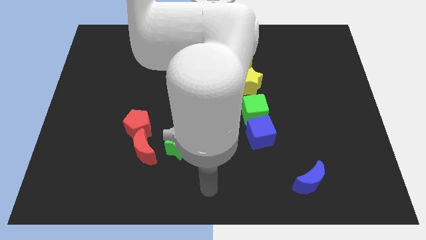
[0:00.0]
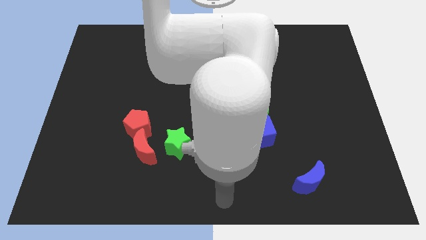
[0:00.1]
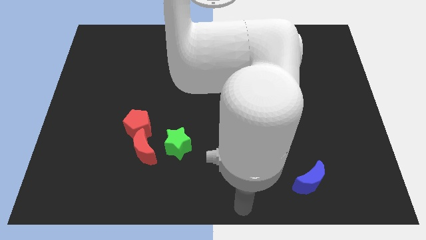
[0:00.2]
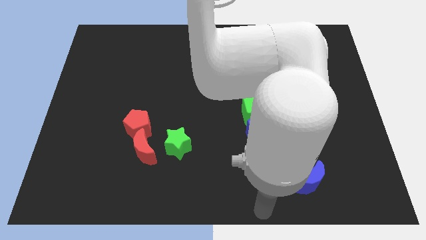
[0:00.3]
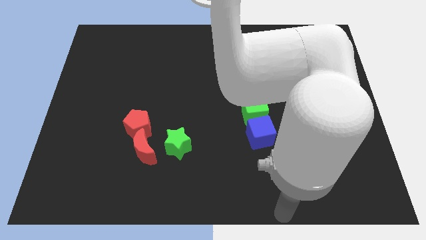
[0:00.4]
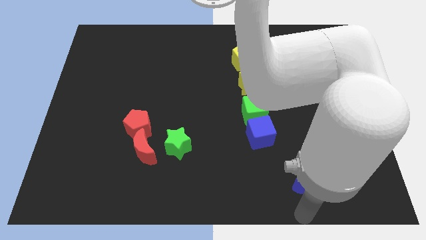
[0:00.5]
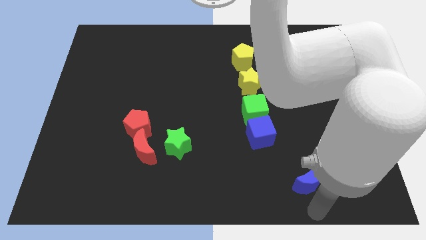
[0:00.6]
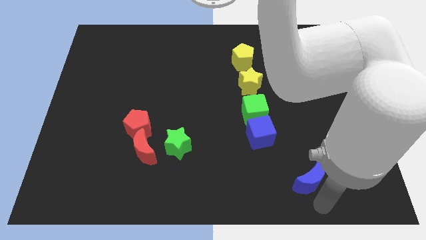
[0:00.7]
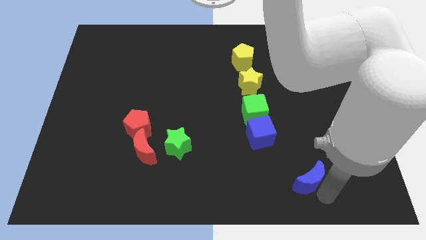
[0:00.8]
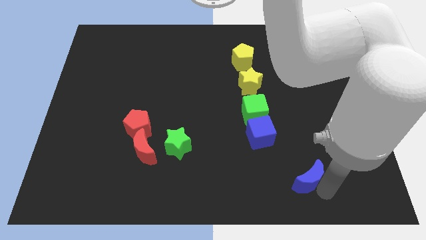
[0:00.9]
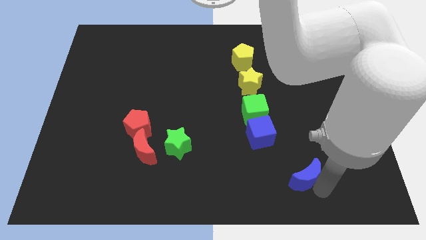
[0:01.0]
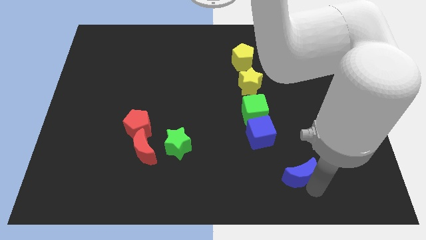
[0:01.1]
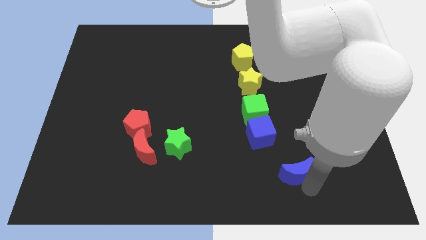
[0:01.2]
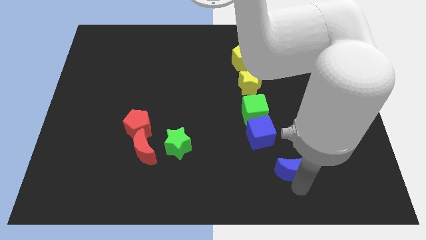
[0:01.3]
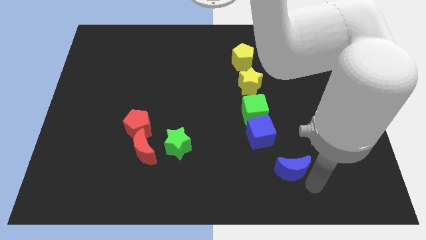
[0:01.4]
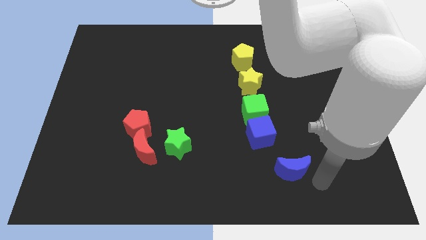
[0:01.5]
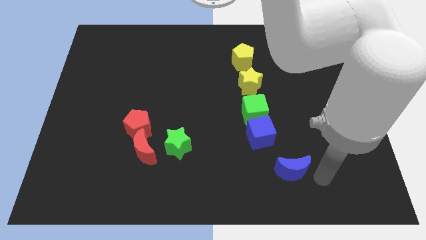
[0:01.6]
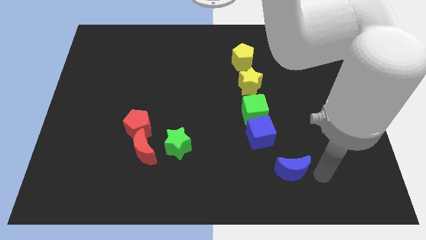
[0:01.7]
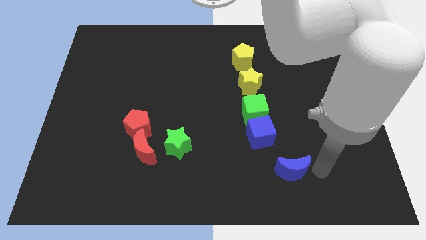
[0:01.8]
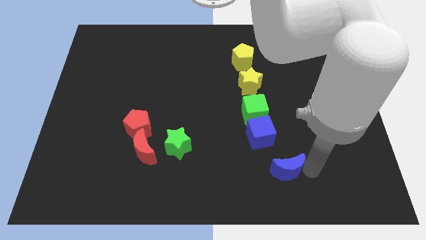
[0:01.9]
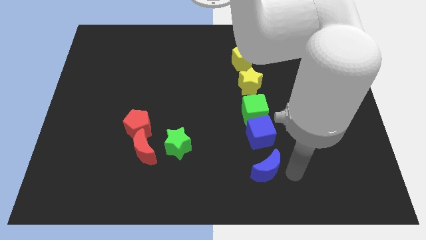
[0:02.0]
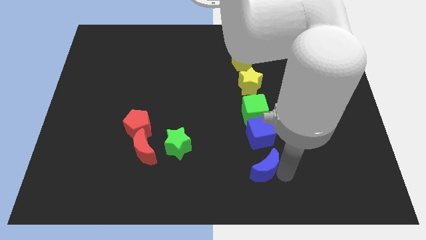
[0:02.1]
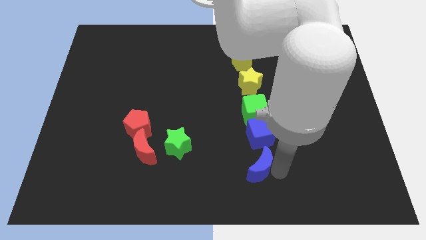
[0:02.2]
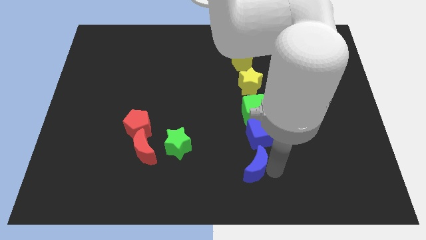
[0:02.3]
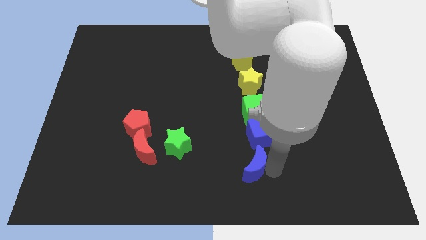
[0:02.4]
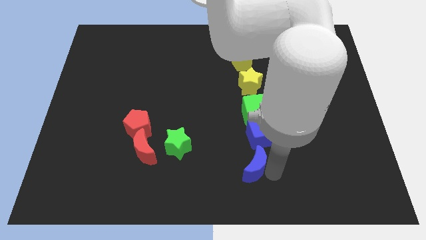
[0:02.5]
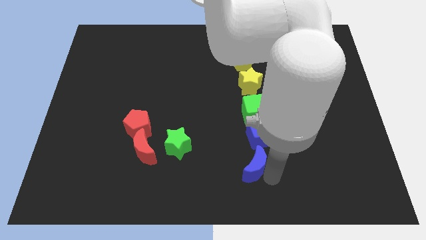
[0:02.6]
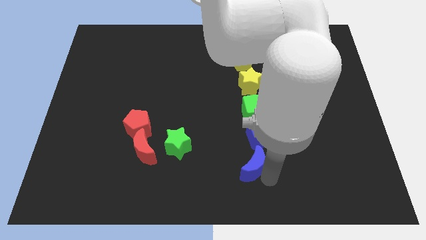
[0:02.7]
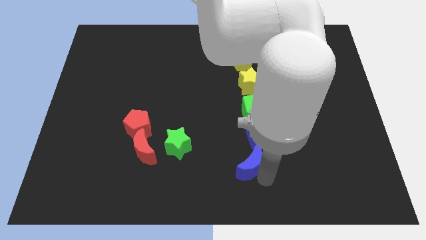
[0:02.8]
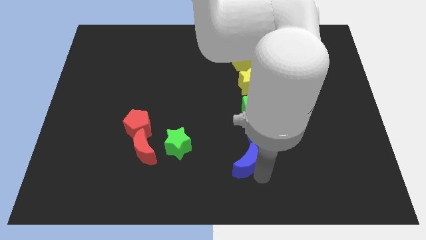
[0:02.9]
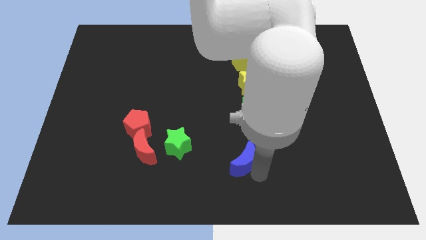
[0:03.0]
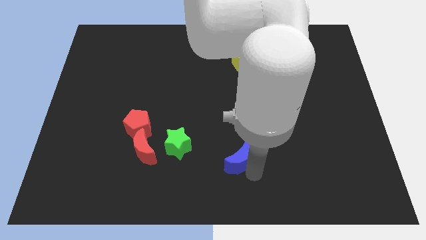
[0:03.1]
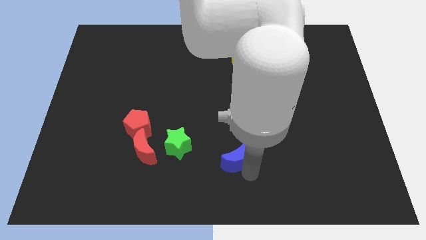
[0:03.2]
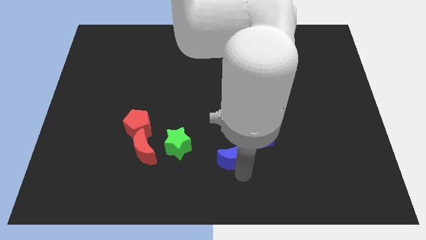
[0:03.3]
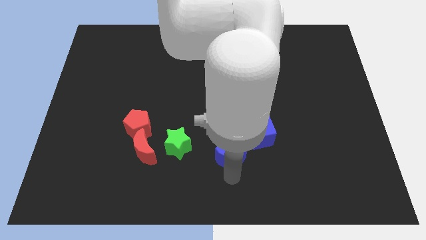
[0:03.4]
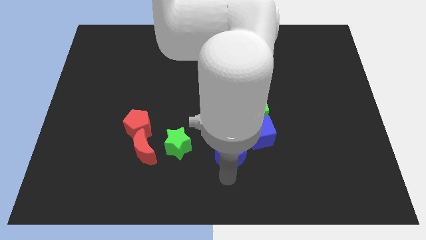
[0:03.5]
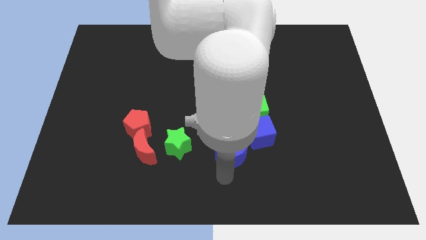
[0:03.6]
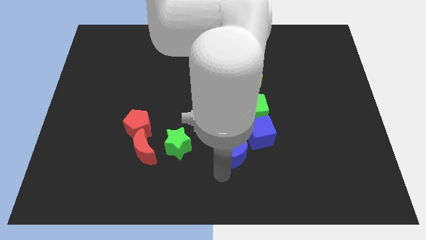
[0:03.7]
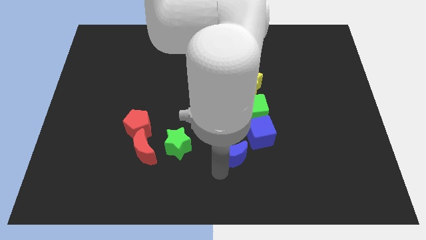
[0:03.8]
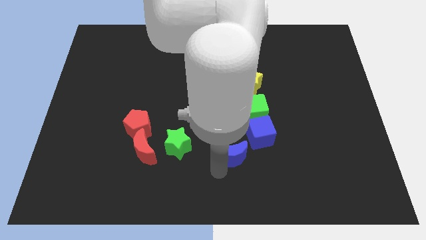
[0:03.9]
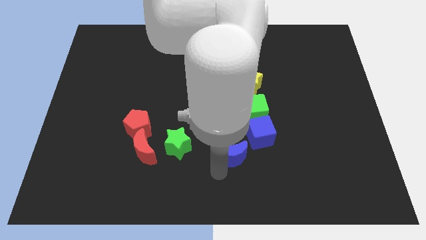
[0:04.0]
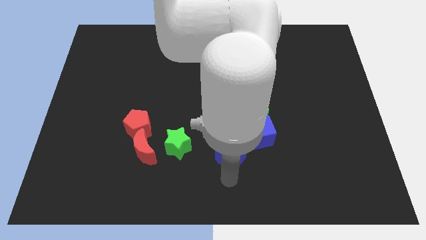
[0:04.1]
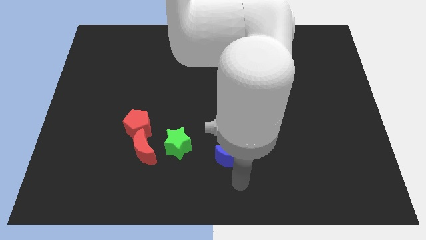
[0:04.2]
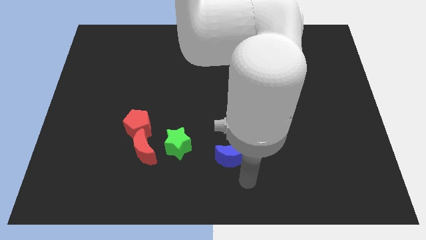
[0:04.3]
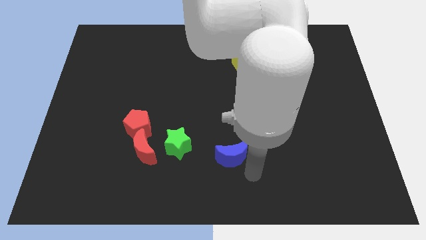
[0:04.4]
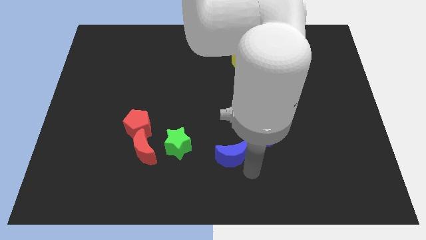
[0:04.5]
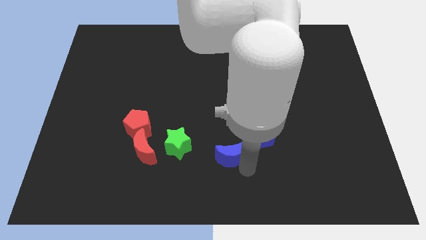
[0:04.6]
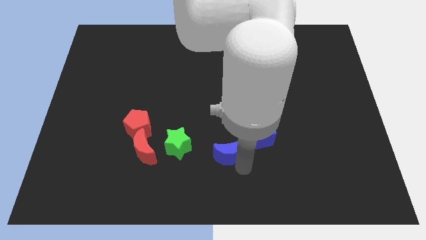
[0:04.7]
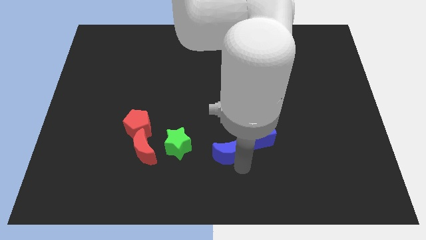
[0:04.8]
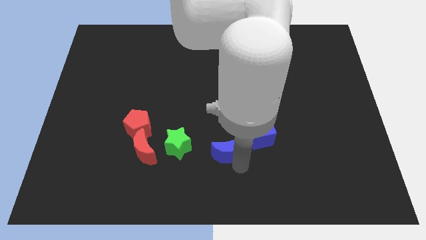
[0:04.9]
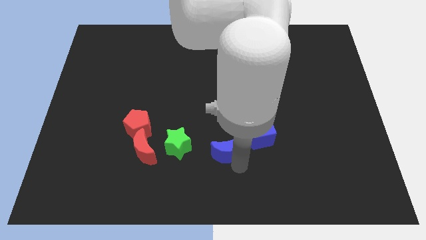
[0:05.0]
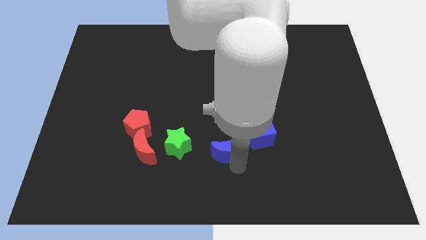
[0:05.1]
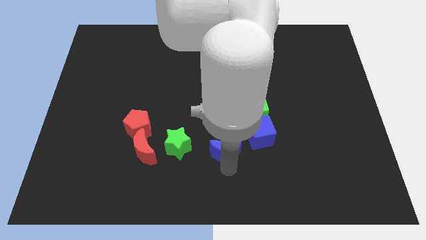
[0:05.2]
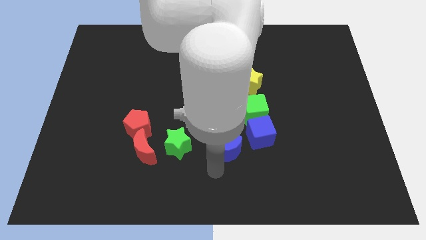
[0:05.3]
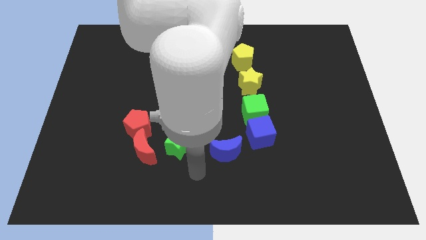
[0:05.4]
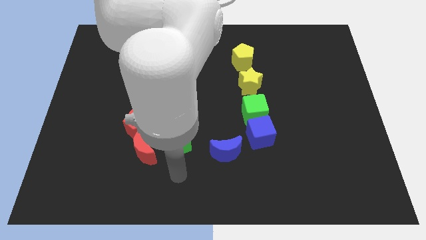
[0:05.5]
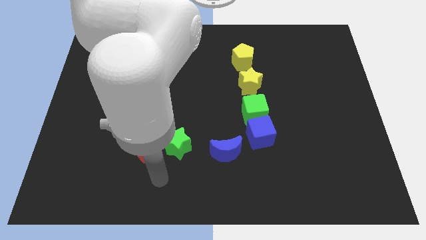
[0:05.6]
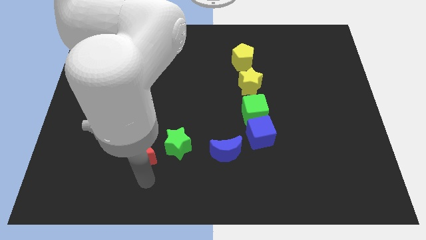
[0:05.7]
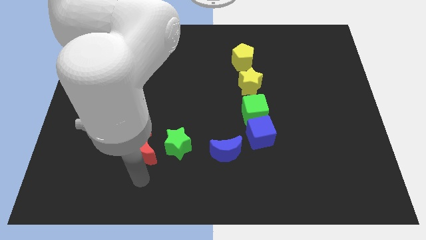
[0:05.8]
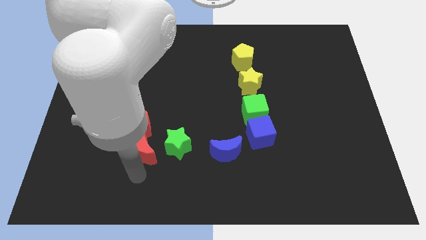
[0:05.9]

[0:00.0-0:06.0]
place the blue moon horizontally to the right side of the red moon

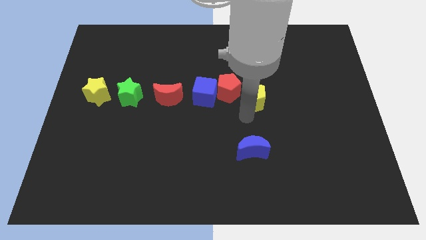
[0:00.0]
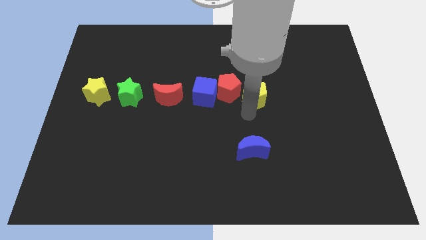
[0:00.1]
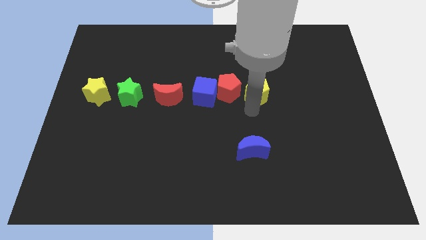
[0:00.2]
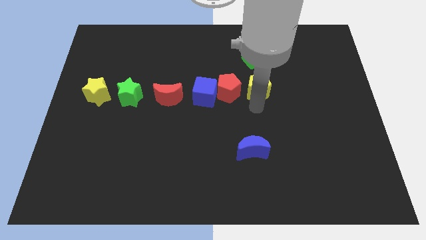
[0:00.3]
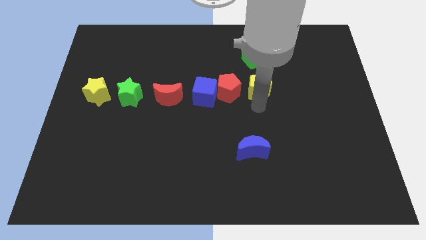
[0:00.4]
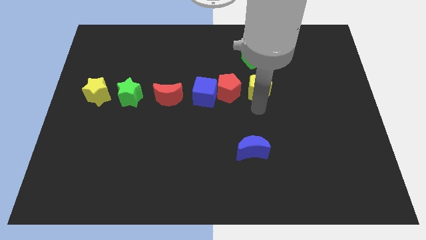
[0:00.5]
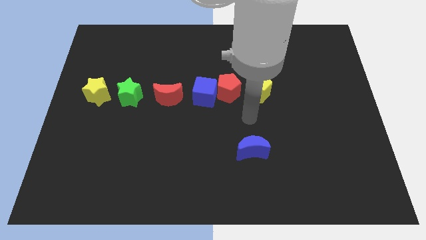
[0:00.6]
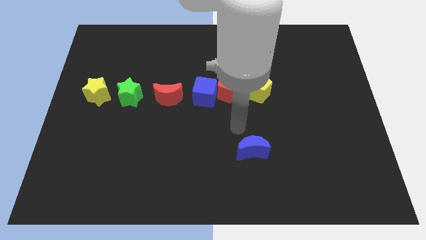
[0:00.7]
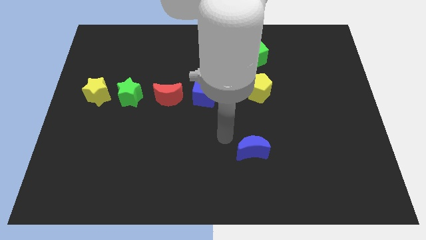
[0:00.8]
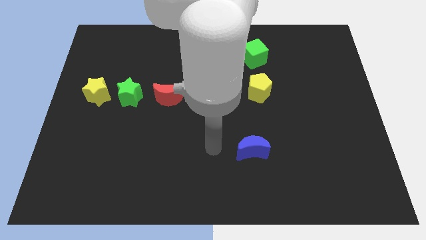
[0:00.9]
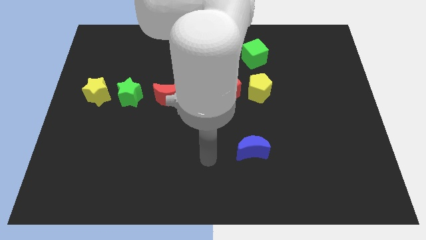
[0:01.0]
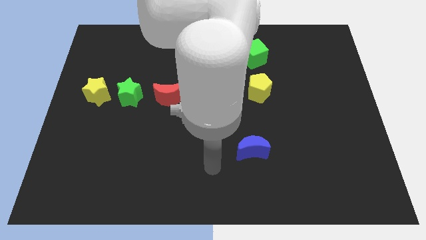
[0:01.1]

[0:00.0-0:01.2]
slightly move yellow pentagon upwards

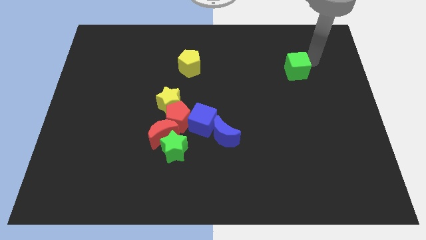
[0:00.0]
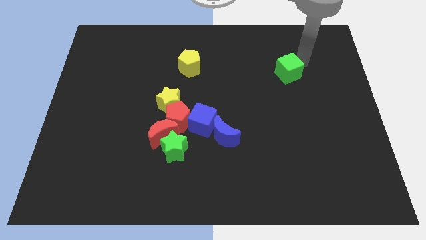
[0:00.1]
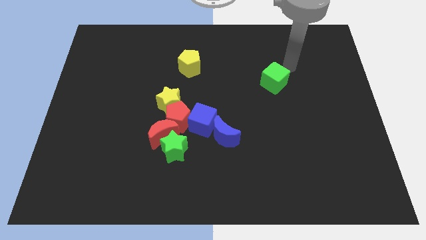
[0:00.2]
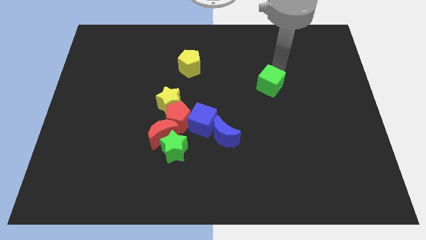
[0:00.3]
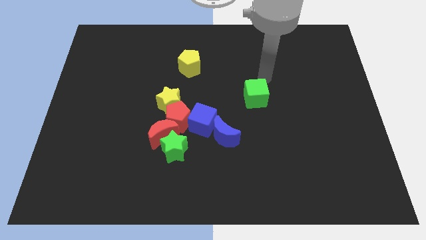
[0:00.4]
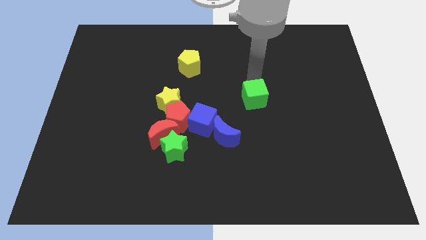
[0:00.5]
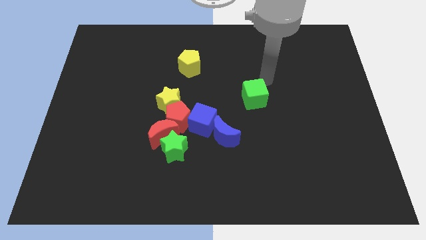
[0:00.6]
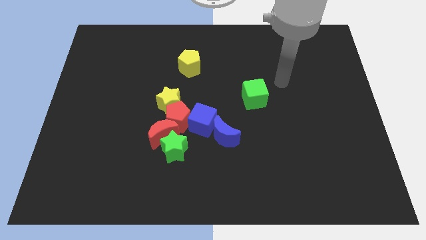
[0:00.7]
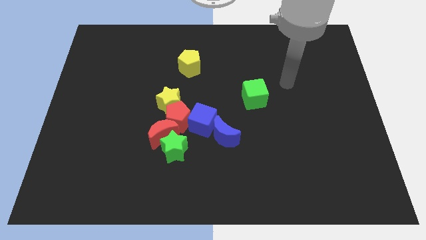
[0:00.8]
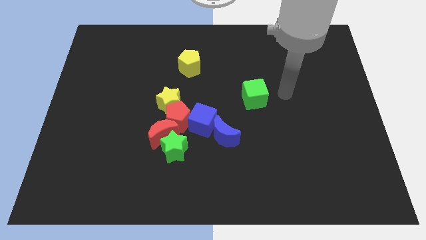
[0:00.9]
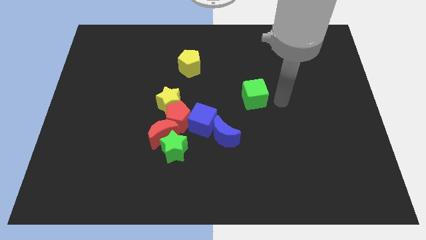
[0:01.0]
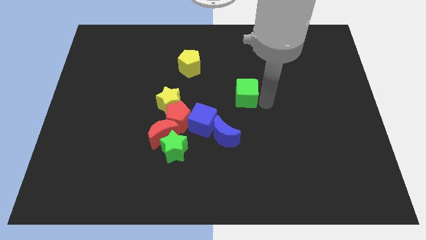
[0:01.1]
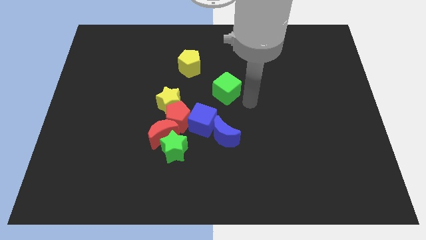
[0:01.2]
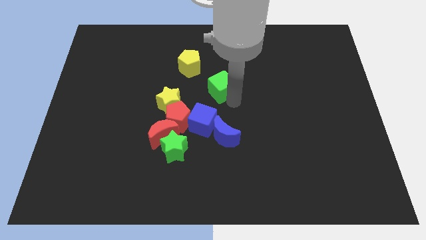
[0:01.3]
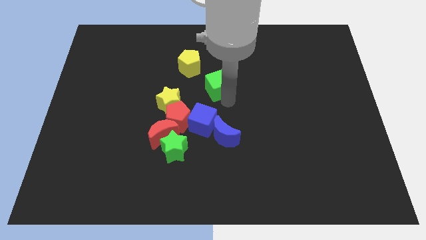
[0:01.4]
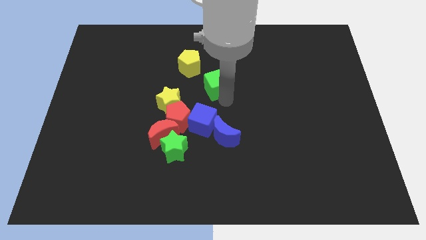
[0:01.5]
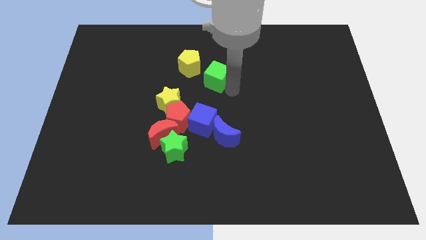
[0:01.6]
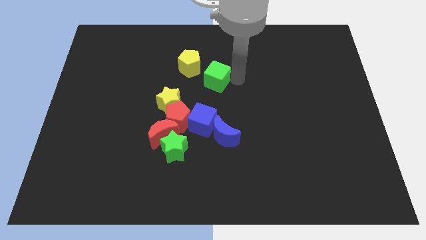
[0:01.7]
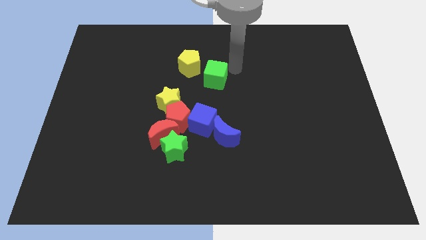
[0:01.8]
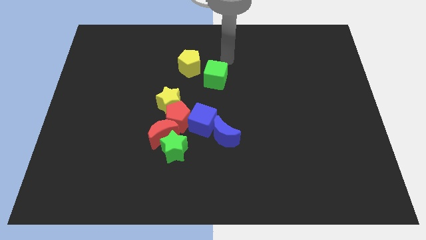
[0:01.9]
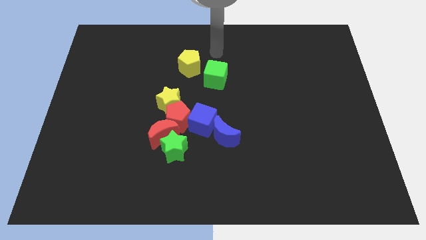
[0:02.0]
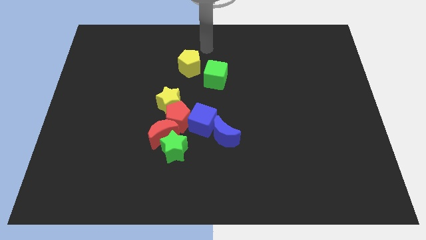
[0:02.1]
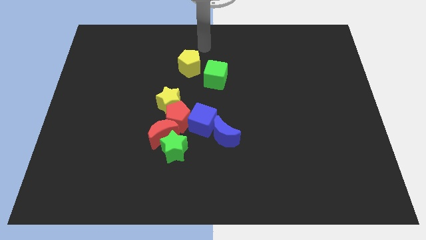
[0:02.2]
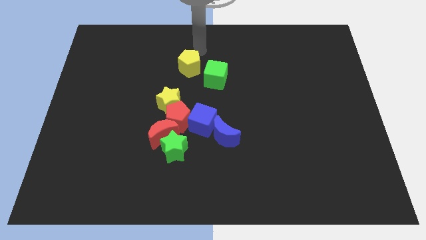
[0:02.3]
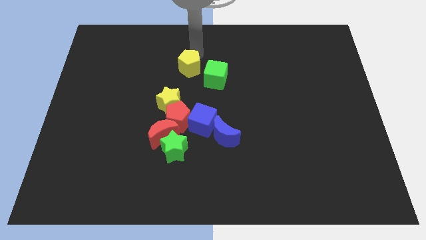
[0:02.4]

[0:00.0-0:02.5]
place the green cube at the bottom right side of yellow pentagon
